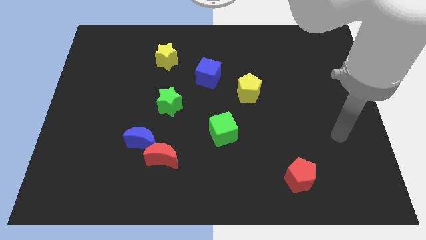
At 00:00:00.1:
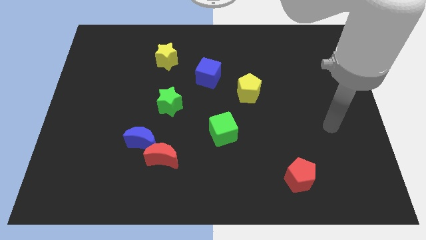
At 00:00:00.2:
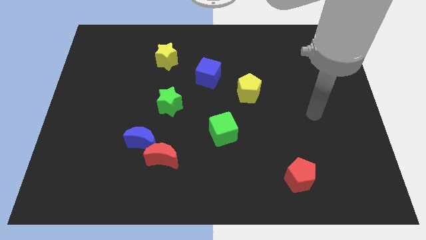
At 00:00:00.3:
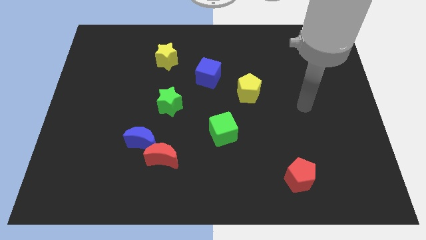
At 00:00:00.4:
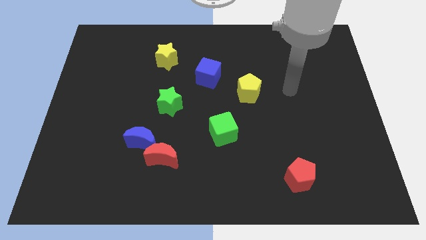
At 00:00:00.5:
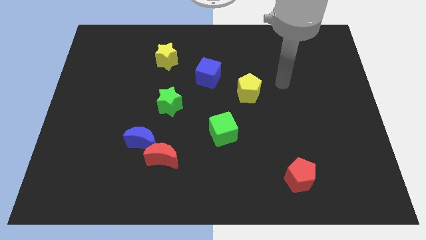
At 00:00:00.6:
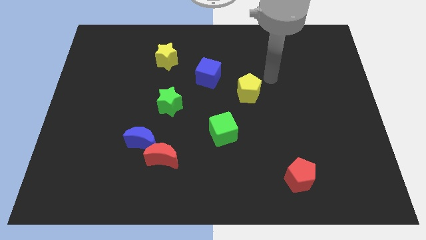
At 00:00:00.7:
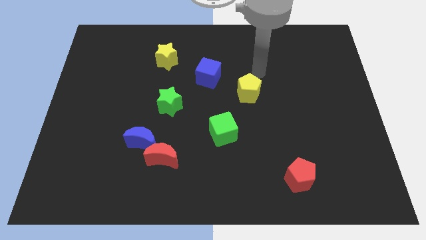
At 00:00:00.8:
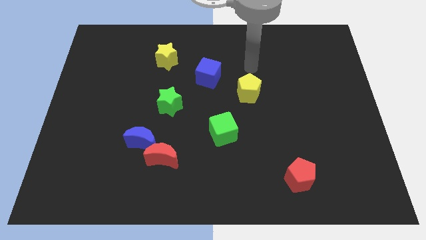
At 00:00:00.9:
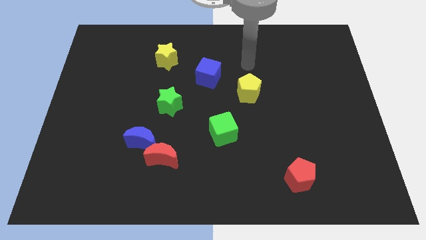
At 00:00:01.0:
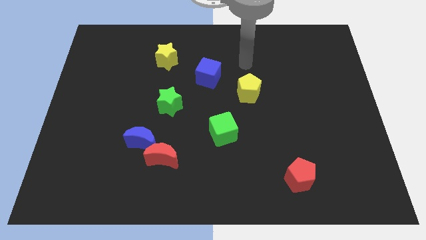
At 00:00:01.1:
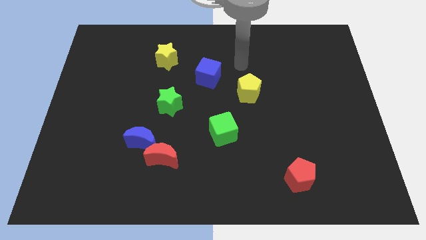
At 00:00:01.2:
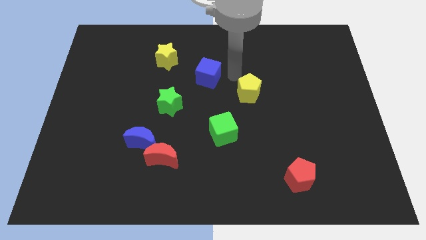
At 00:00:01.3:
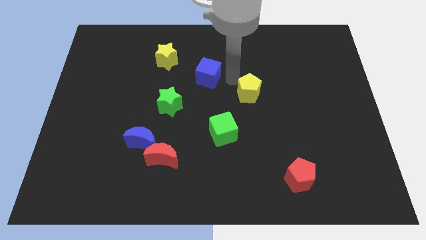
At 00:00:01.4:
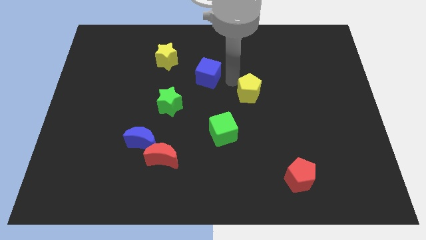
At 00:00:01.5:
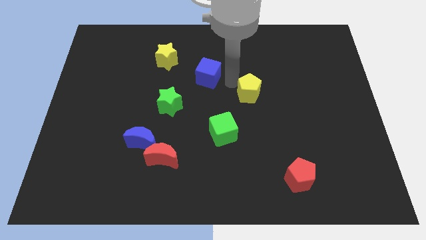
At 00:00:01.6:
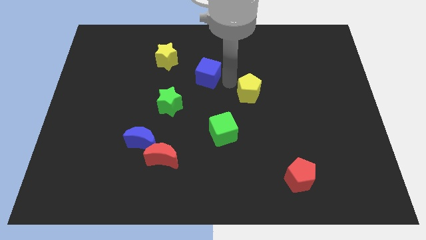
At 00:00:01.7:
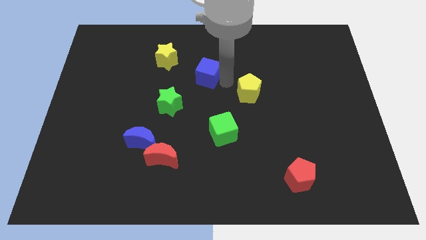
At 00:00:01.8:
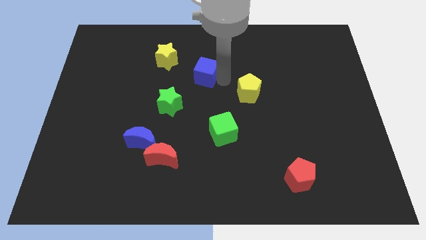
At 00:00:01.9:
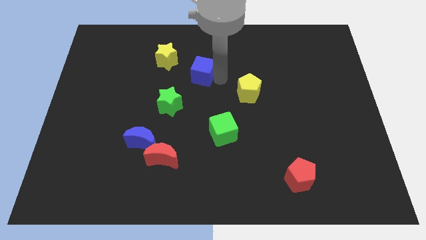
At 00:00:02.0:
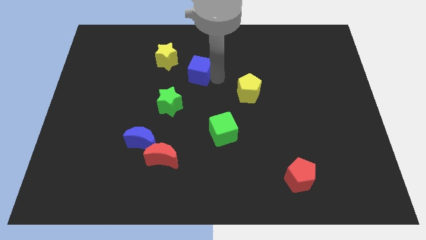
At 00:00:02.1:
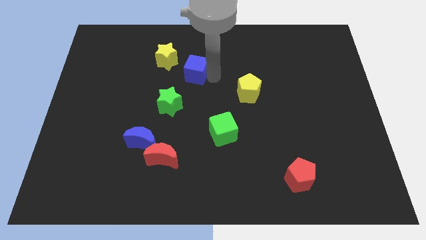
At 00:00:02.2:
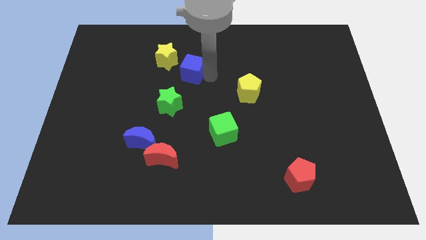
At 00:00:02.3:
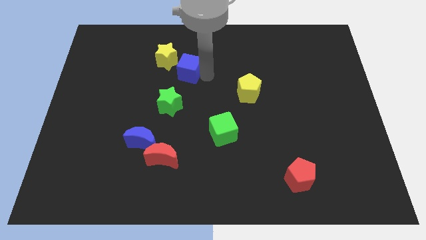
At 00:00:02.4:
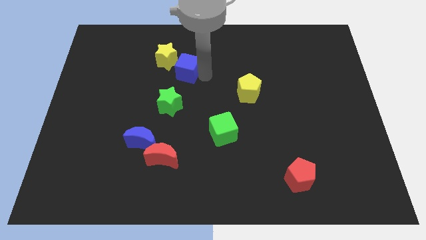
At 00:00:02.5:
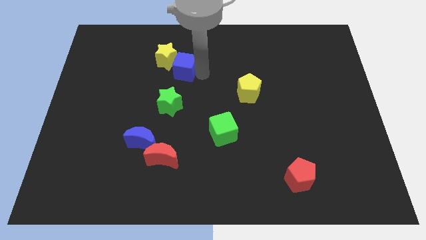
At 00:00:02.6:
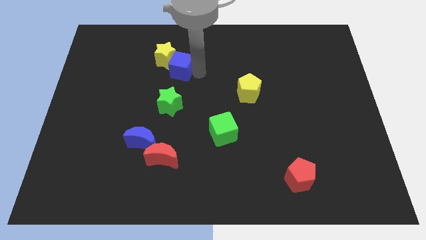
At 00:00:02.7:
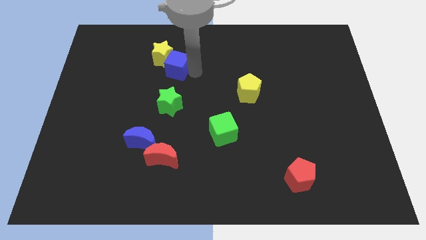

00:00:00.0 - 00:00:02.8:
slide the blue cube to the yellow star

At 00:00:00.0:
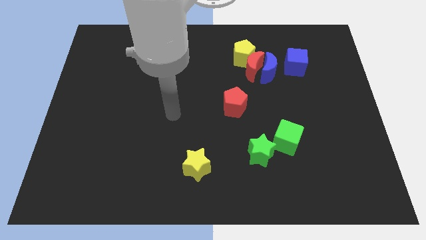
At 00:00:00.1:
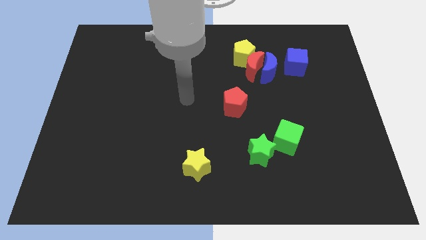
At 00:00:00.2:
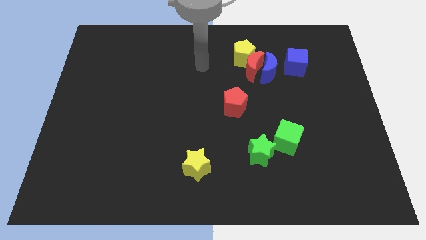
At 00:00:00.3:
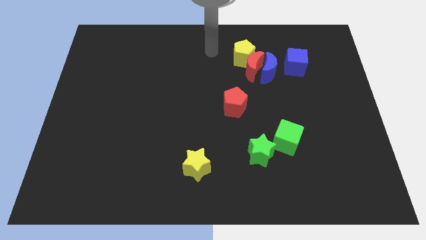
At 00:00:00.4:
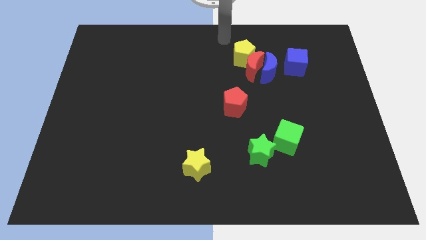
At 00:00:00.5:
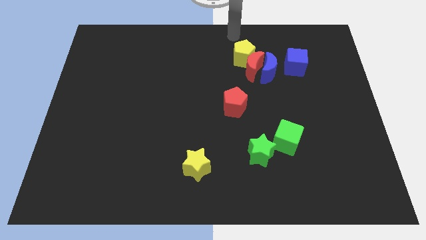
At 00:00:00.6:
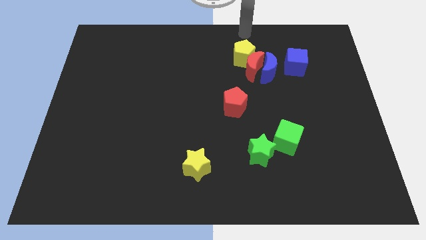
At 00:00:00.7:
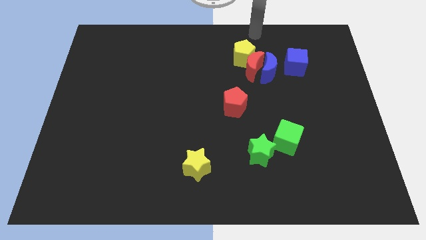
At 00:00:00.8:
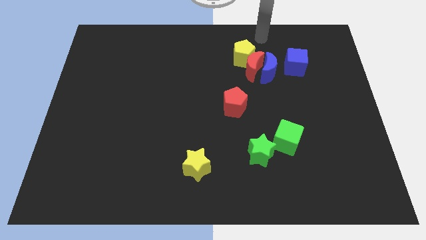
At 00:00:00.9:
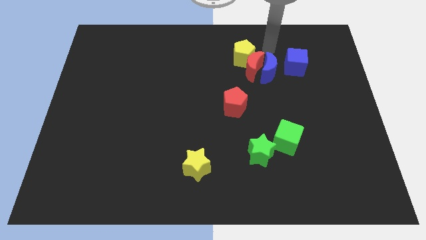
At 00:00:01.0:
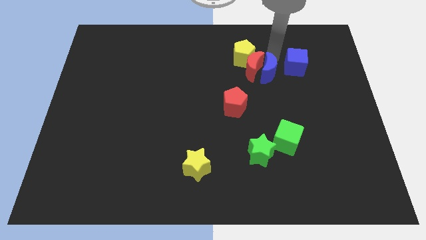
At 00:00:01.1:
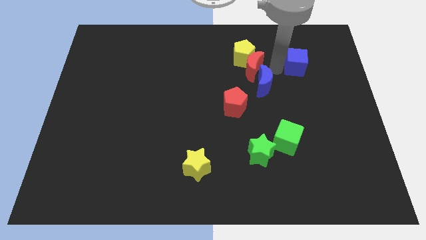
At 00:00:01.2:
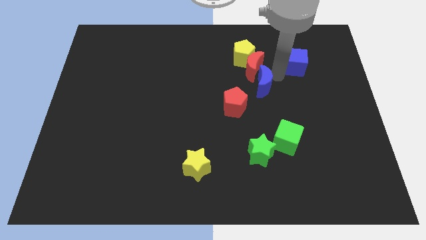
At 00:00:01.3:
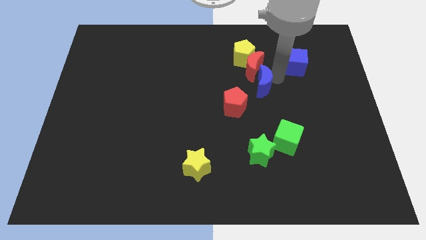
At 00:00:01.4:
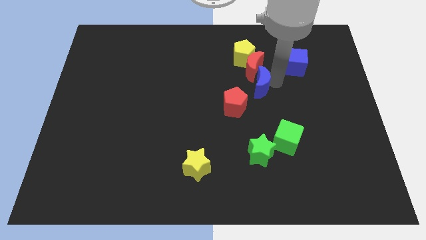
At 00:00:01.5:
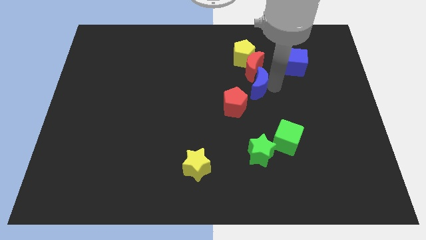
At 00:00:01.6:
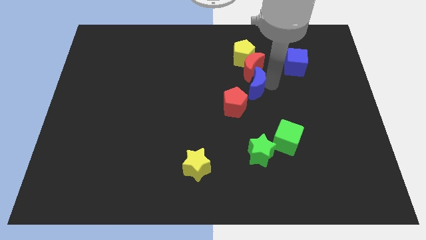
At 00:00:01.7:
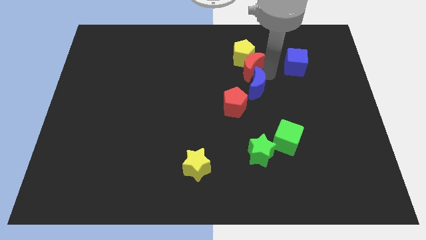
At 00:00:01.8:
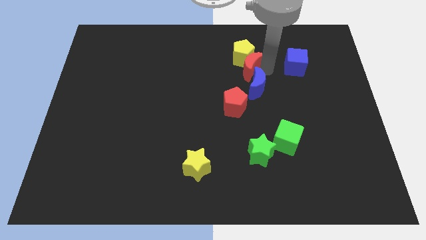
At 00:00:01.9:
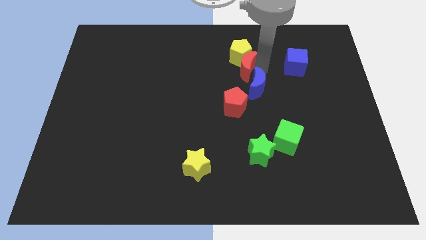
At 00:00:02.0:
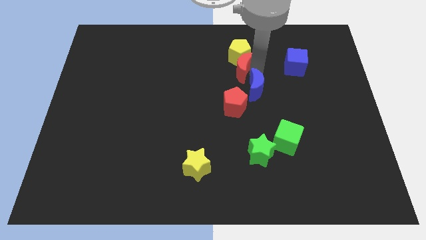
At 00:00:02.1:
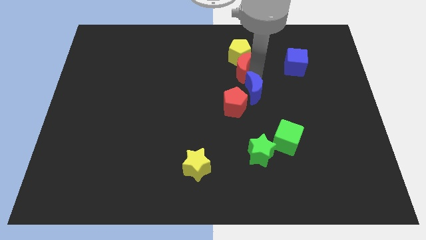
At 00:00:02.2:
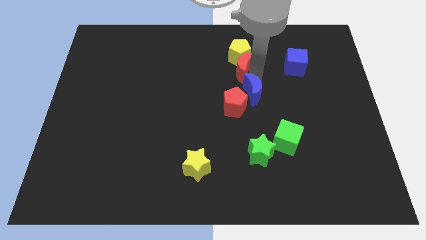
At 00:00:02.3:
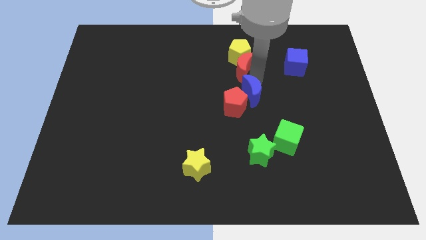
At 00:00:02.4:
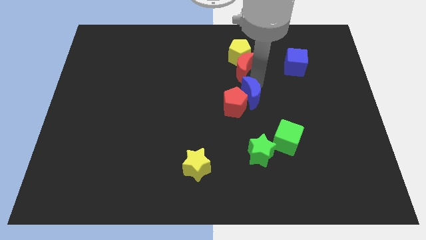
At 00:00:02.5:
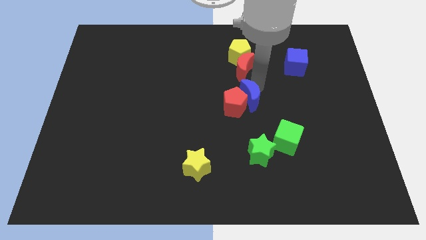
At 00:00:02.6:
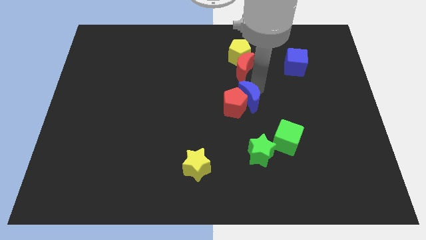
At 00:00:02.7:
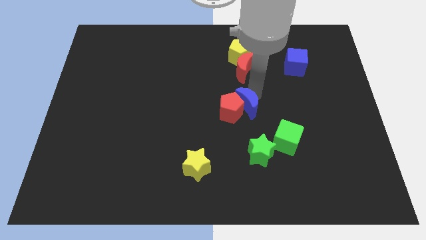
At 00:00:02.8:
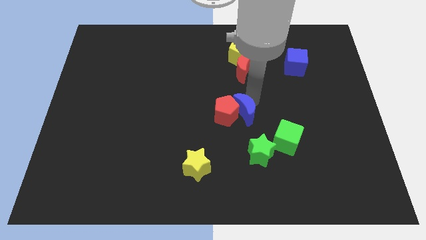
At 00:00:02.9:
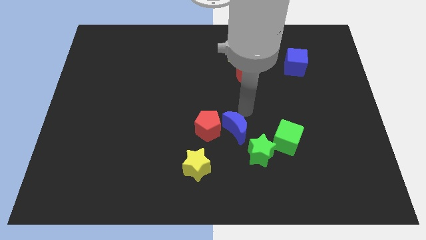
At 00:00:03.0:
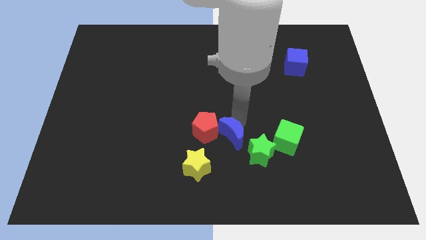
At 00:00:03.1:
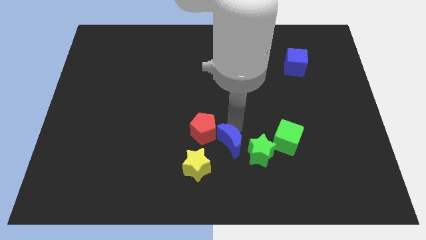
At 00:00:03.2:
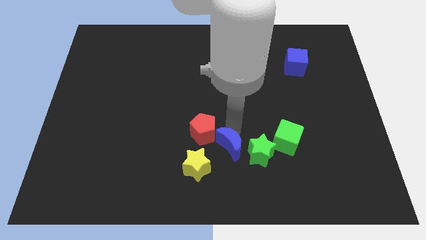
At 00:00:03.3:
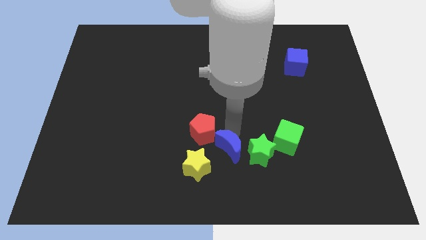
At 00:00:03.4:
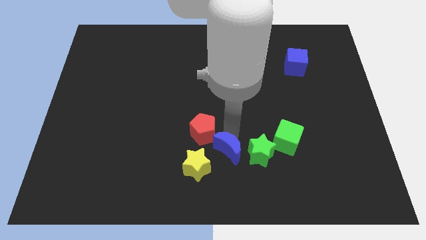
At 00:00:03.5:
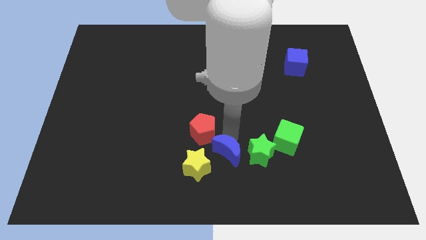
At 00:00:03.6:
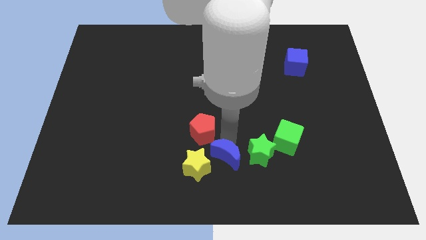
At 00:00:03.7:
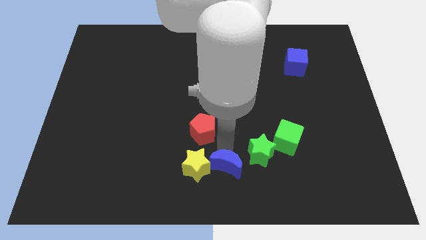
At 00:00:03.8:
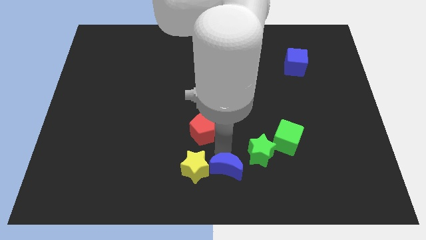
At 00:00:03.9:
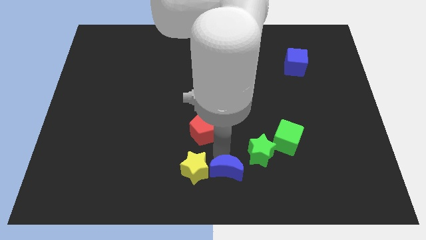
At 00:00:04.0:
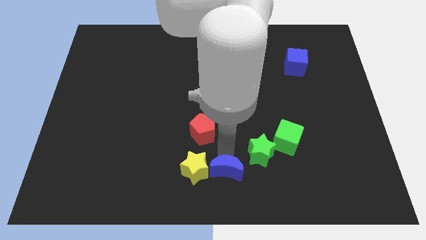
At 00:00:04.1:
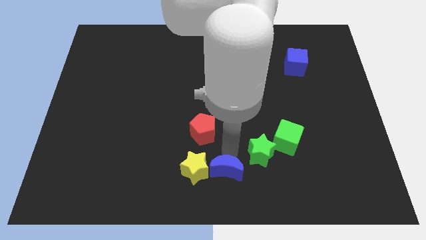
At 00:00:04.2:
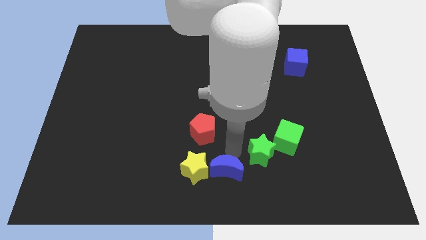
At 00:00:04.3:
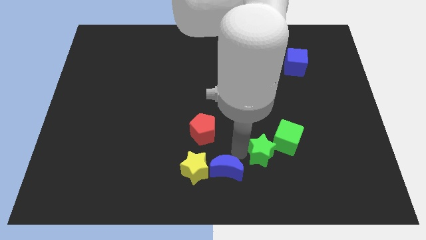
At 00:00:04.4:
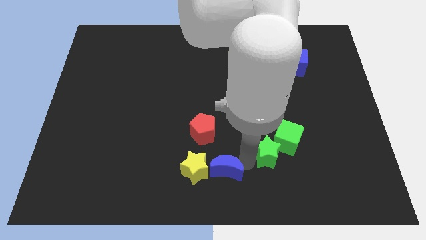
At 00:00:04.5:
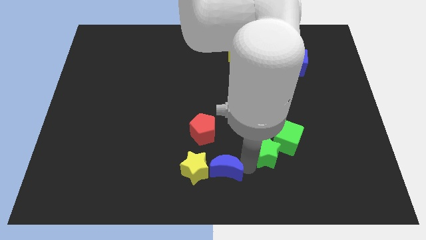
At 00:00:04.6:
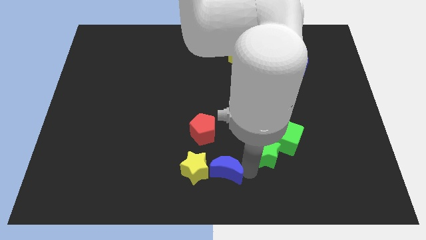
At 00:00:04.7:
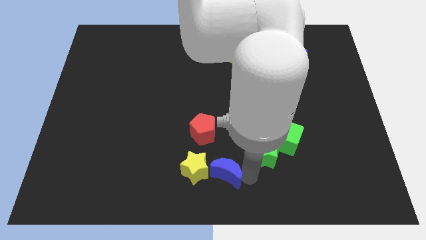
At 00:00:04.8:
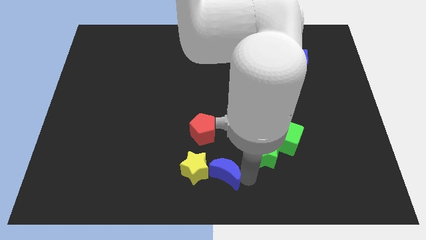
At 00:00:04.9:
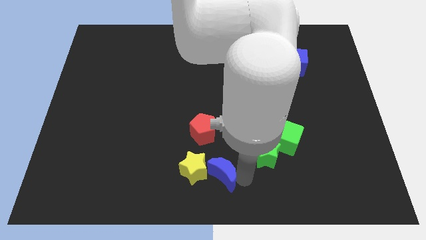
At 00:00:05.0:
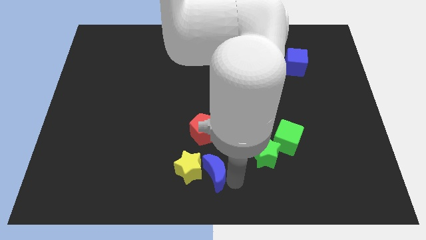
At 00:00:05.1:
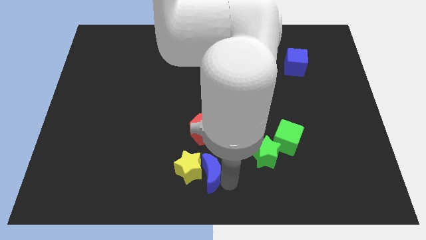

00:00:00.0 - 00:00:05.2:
slide the blue moon next to the yellow star
